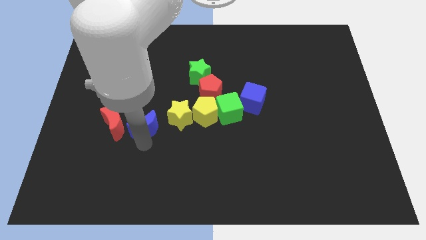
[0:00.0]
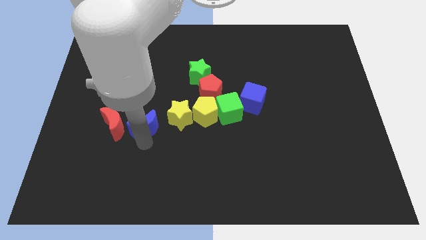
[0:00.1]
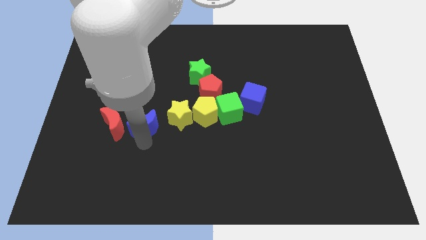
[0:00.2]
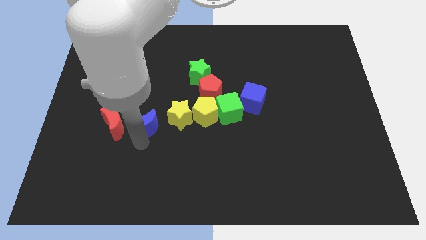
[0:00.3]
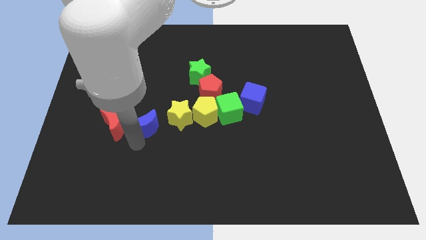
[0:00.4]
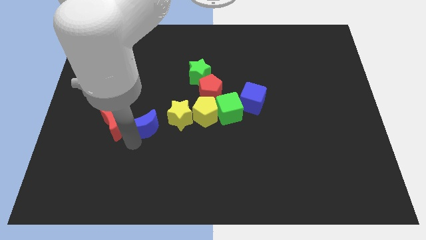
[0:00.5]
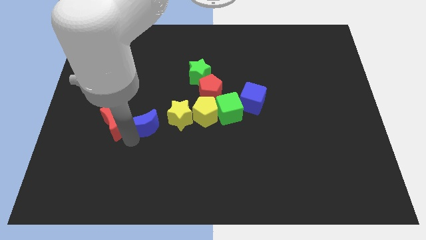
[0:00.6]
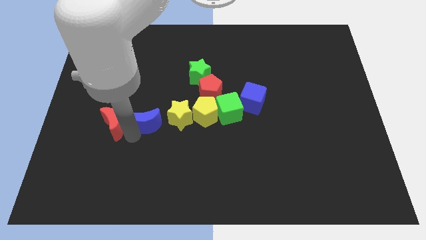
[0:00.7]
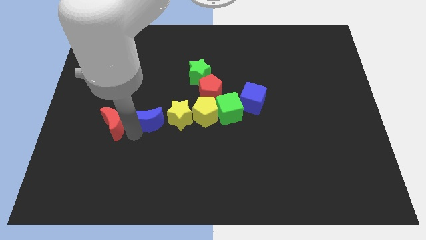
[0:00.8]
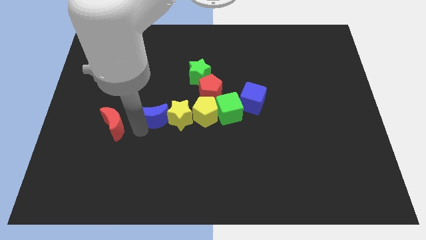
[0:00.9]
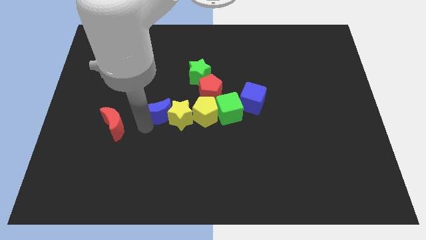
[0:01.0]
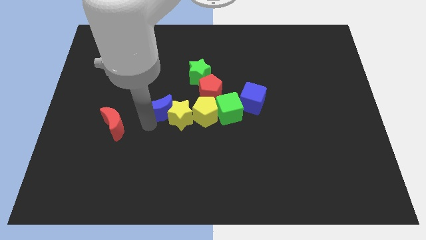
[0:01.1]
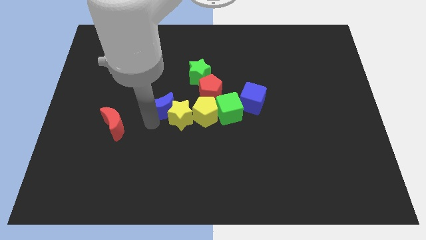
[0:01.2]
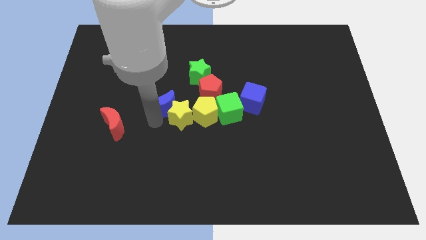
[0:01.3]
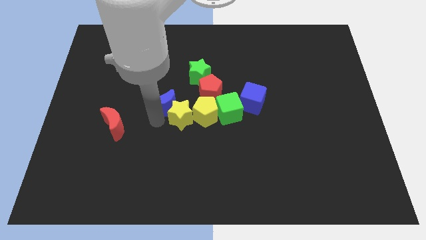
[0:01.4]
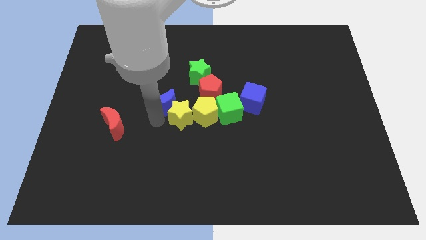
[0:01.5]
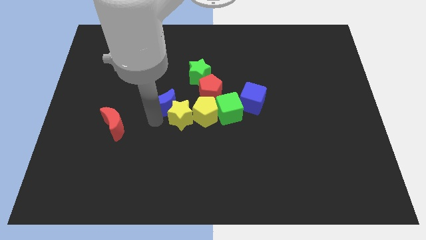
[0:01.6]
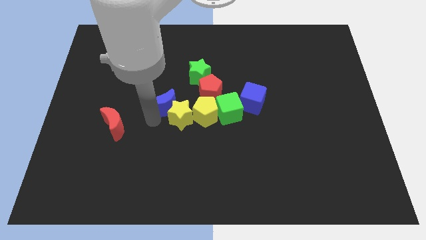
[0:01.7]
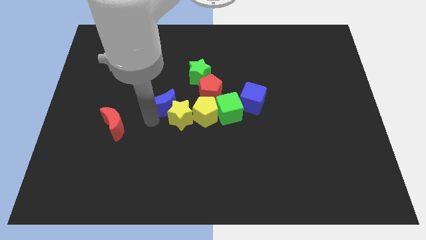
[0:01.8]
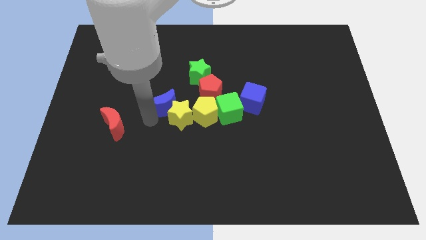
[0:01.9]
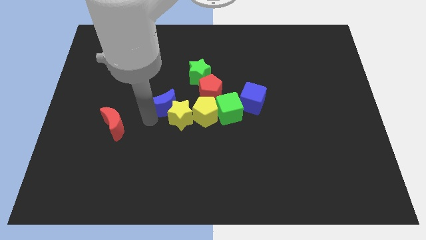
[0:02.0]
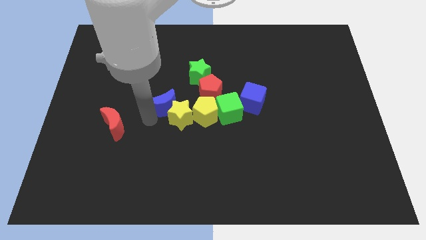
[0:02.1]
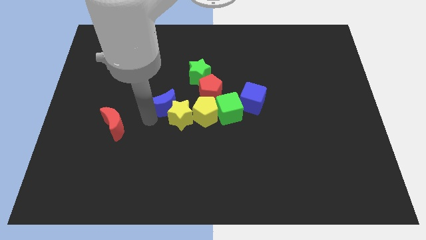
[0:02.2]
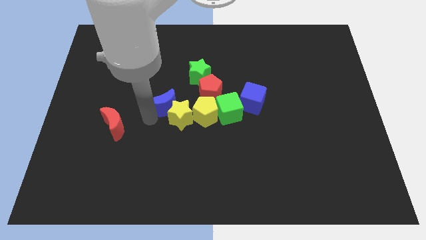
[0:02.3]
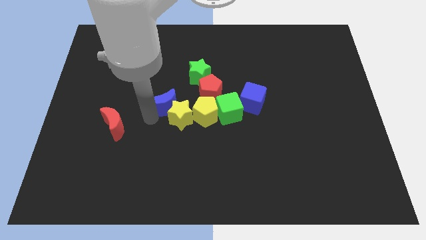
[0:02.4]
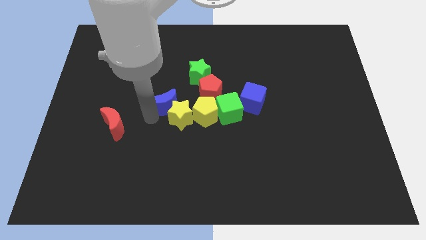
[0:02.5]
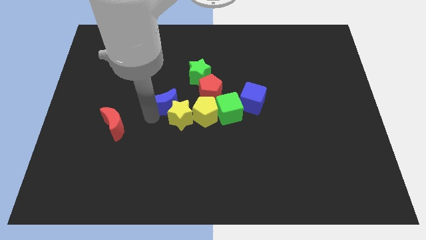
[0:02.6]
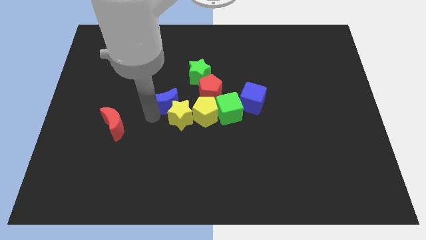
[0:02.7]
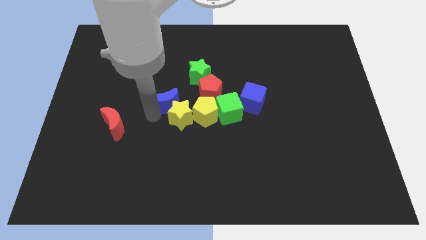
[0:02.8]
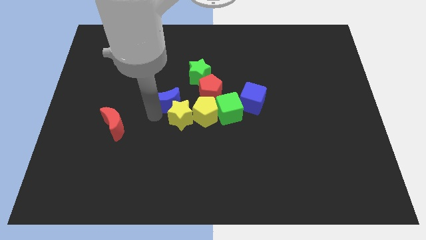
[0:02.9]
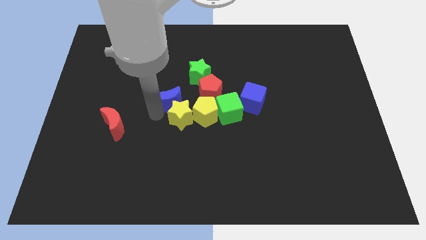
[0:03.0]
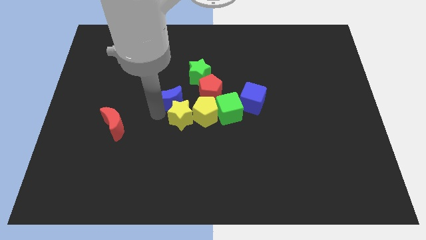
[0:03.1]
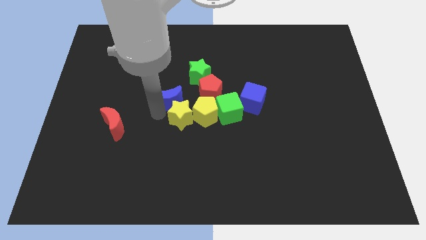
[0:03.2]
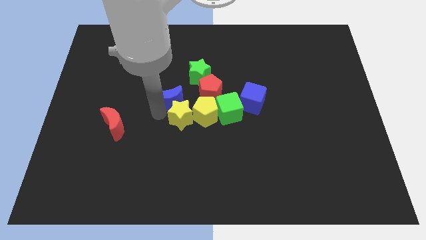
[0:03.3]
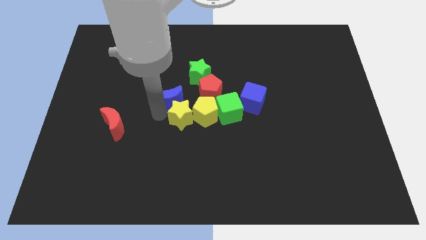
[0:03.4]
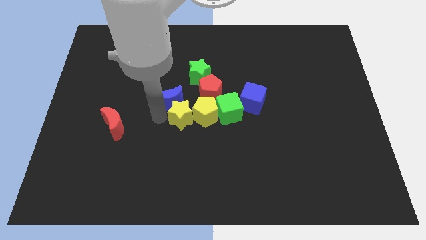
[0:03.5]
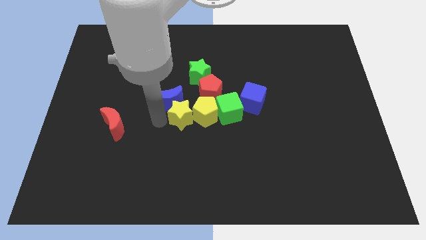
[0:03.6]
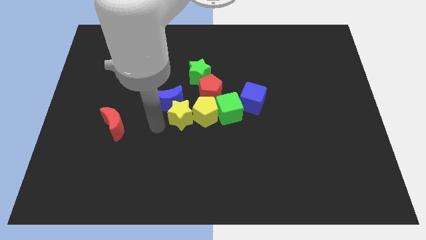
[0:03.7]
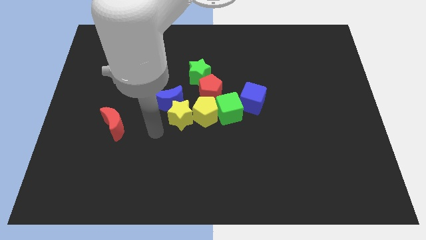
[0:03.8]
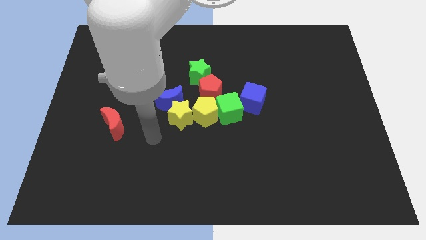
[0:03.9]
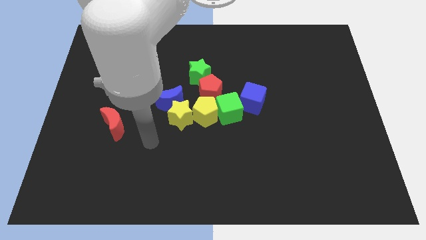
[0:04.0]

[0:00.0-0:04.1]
place blue crescent on the top of the yellow star

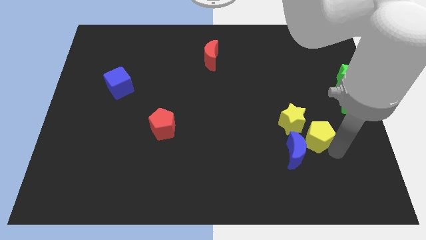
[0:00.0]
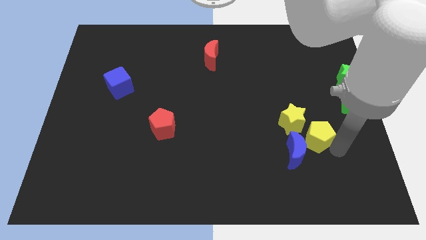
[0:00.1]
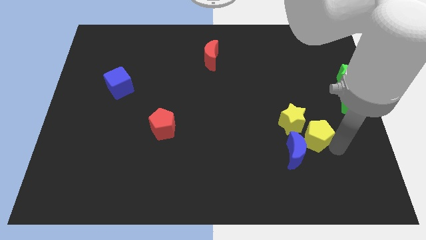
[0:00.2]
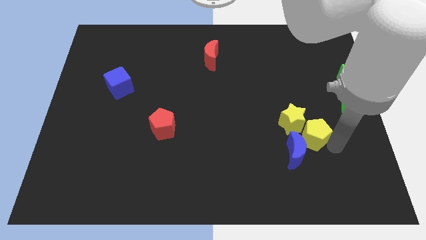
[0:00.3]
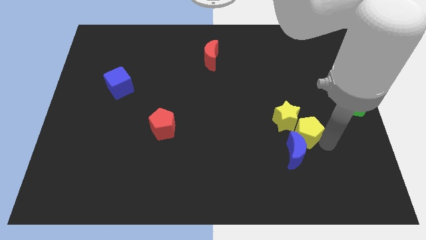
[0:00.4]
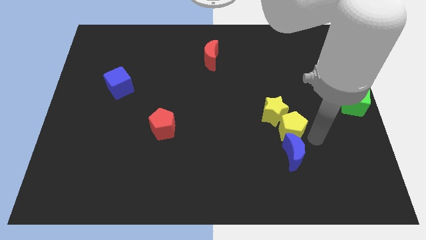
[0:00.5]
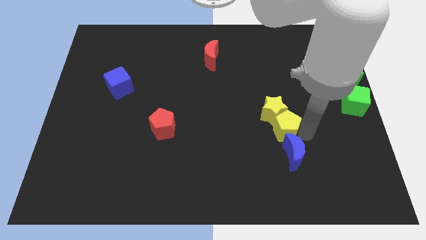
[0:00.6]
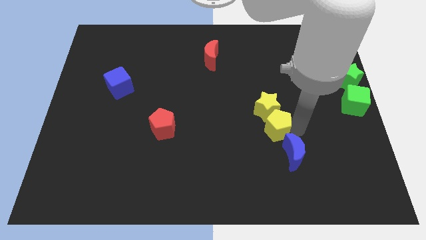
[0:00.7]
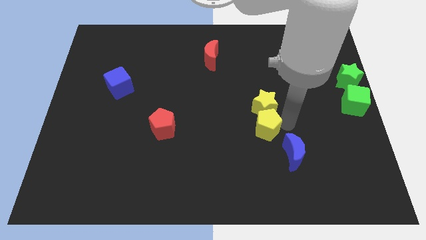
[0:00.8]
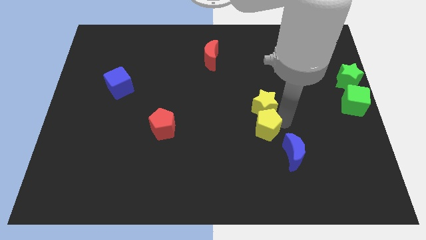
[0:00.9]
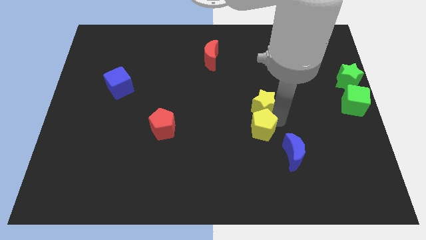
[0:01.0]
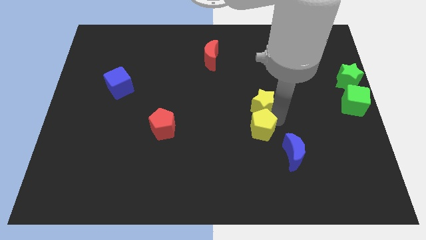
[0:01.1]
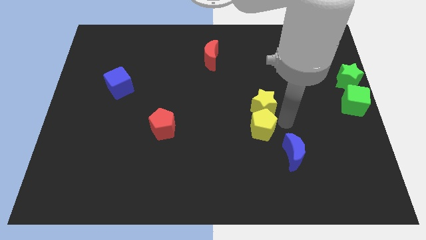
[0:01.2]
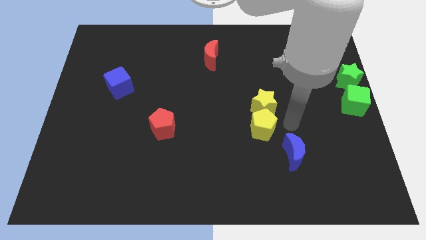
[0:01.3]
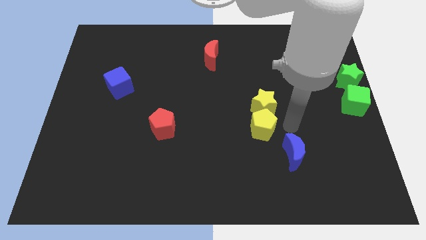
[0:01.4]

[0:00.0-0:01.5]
slide the yellow blocks away from the blue moon

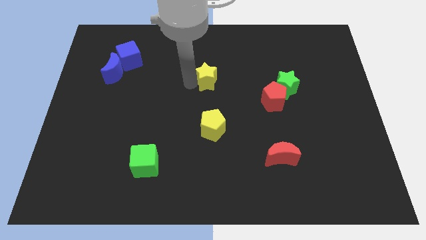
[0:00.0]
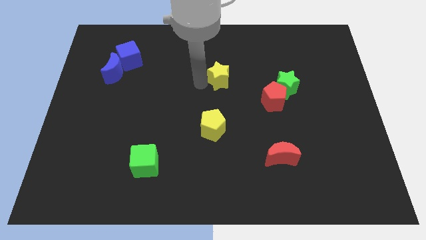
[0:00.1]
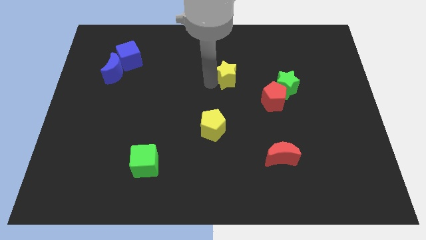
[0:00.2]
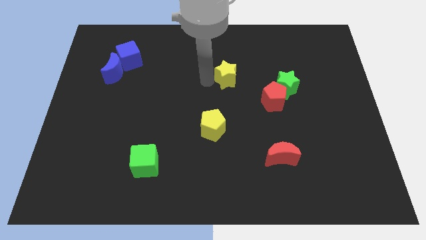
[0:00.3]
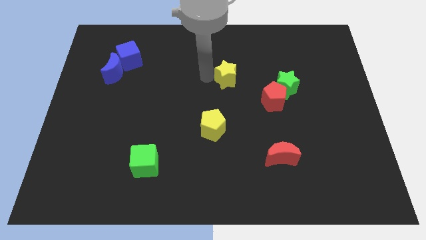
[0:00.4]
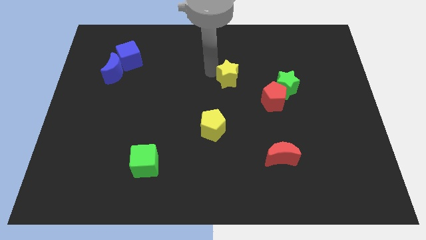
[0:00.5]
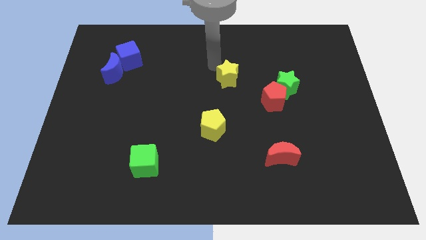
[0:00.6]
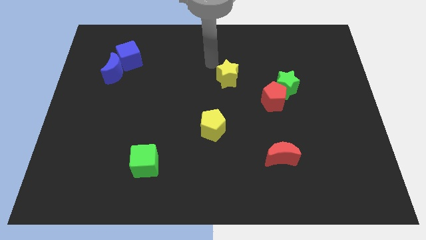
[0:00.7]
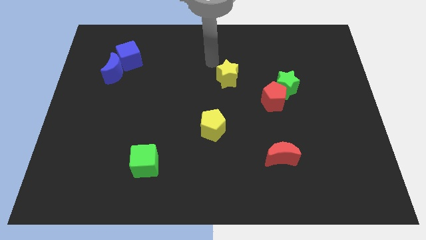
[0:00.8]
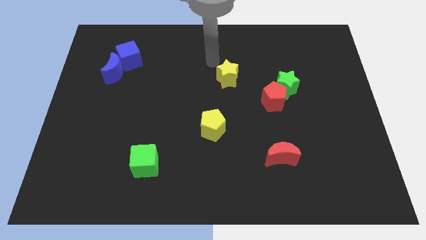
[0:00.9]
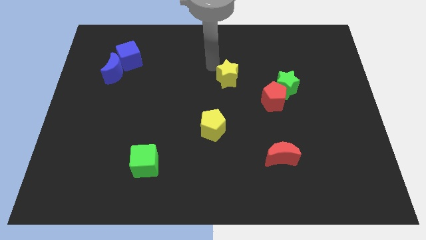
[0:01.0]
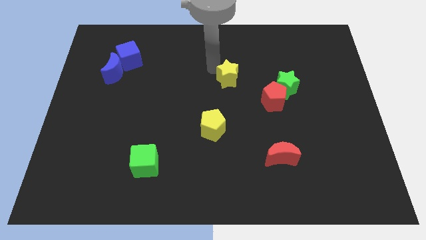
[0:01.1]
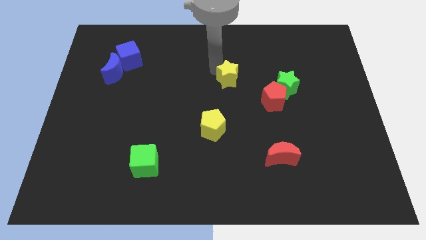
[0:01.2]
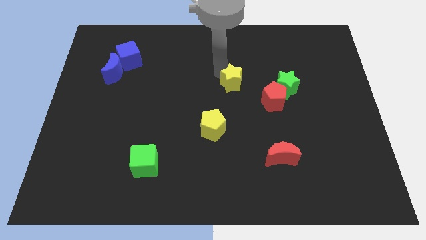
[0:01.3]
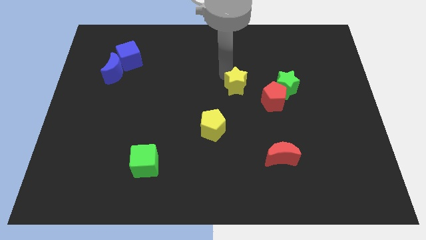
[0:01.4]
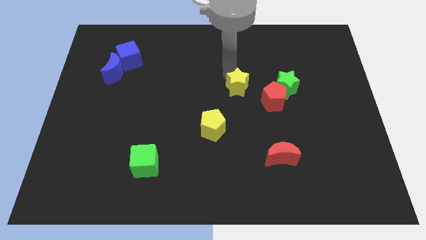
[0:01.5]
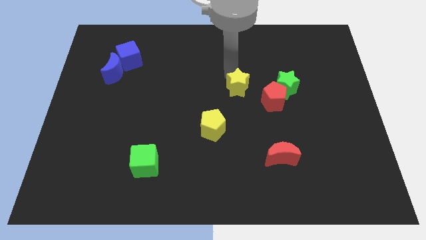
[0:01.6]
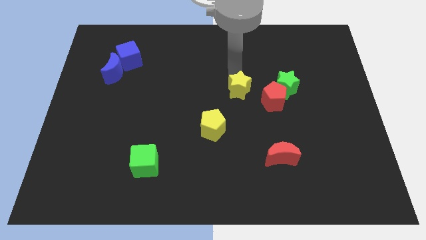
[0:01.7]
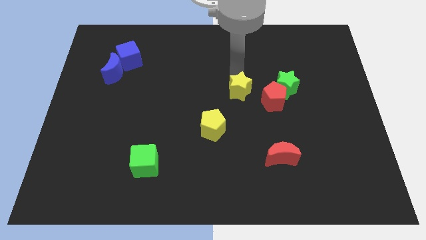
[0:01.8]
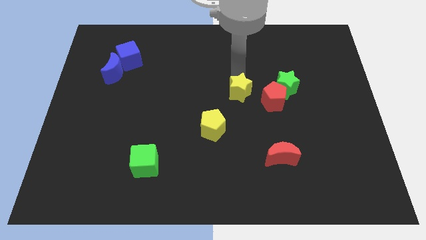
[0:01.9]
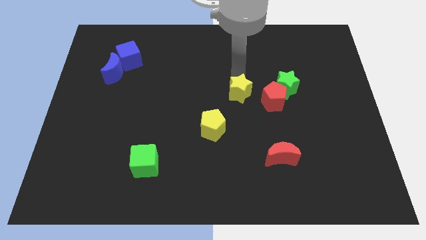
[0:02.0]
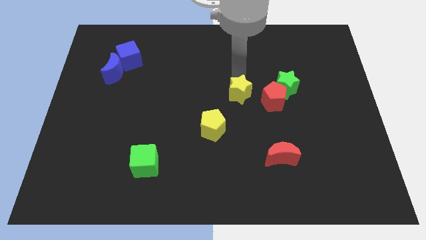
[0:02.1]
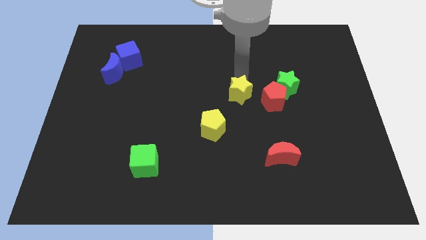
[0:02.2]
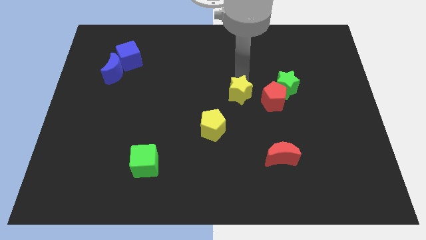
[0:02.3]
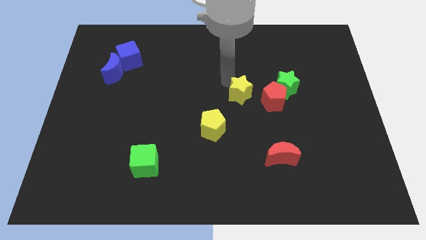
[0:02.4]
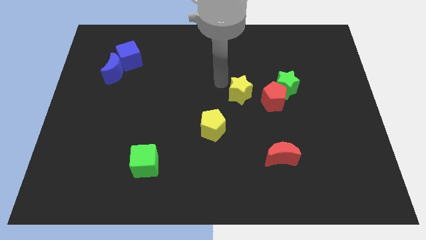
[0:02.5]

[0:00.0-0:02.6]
place the yellow star to the left of the red pentagon

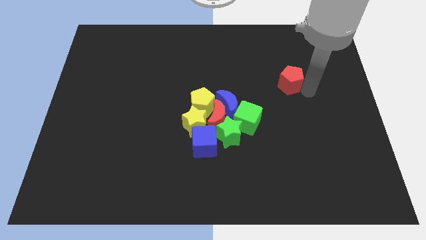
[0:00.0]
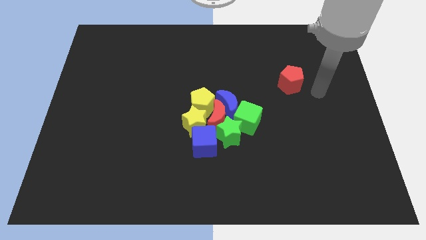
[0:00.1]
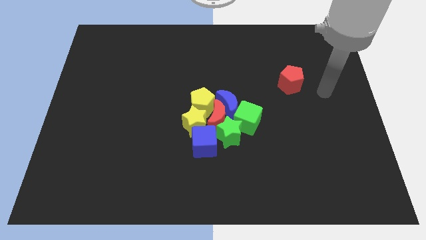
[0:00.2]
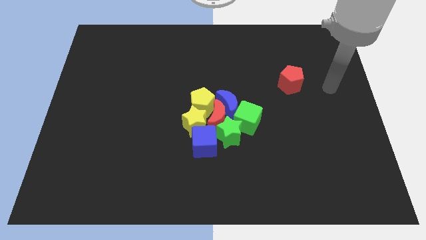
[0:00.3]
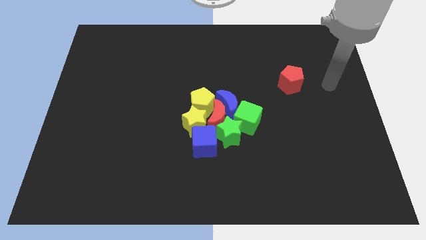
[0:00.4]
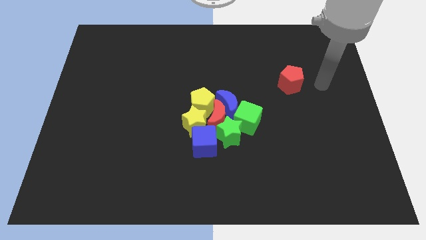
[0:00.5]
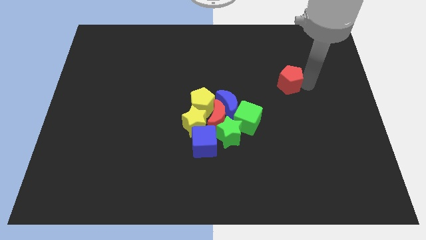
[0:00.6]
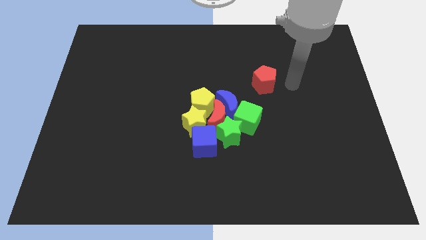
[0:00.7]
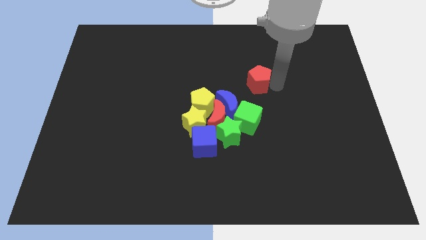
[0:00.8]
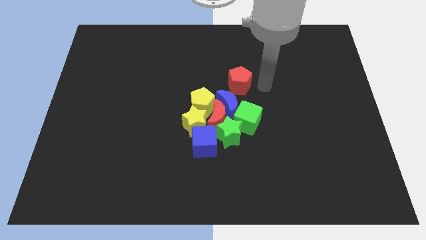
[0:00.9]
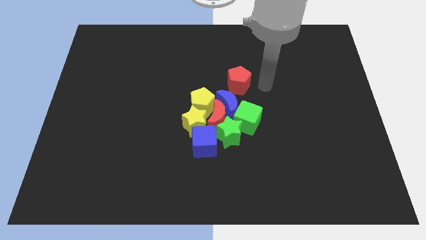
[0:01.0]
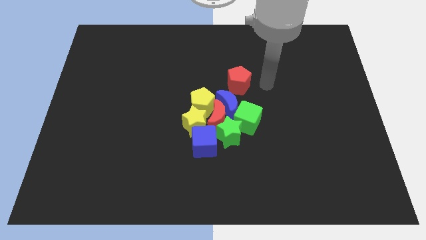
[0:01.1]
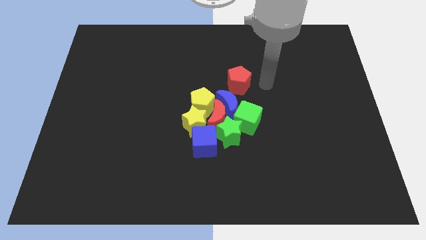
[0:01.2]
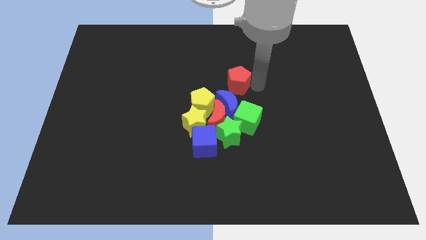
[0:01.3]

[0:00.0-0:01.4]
move red pentagon above blue crescent
